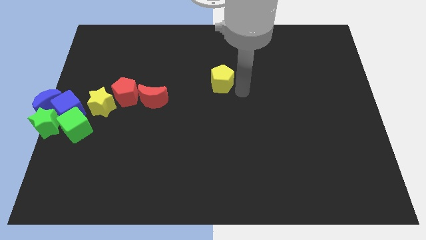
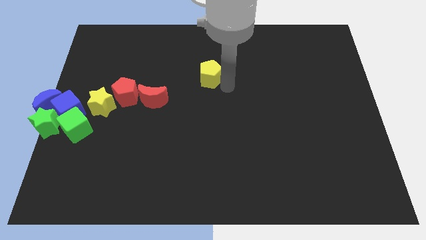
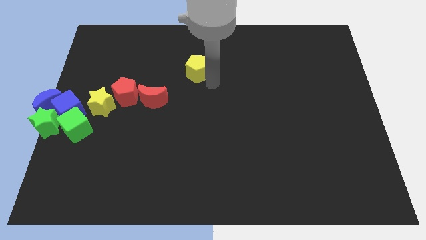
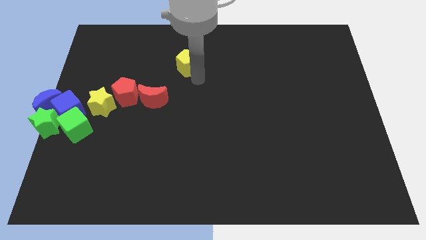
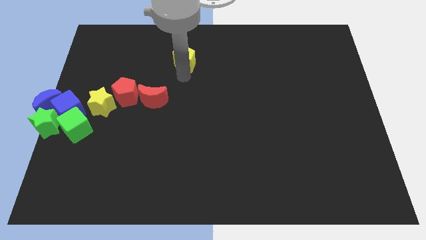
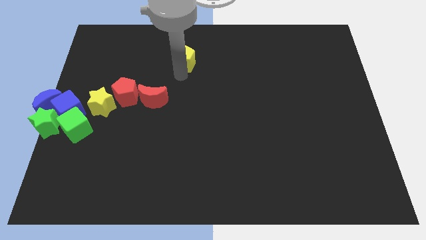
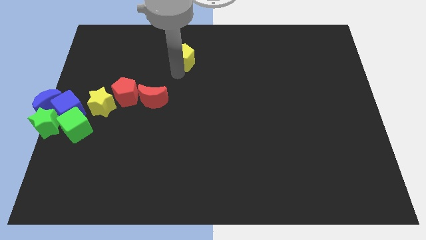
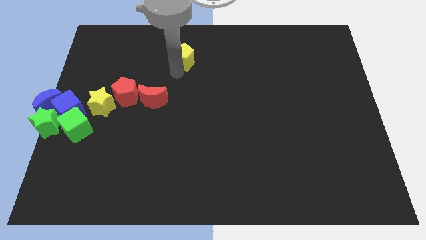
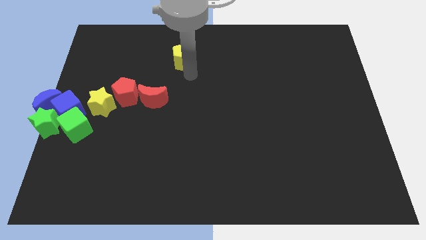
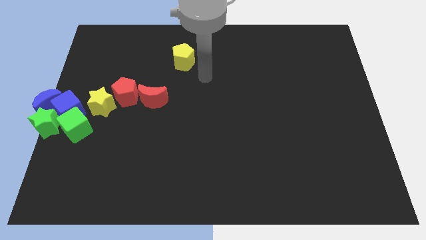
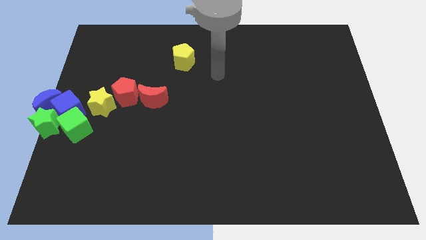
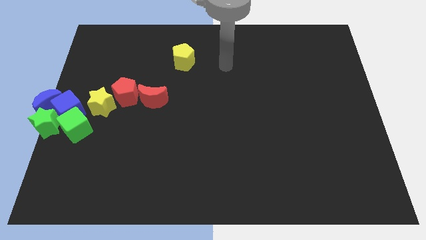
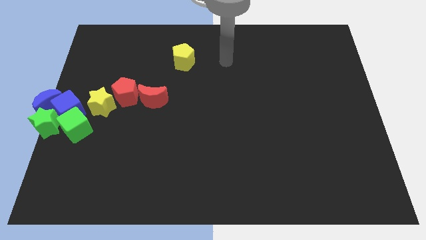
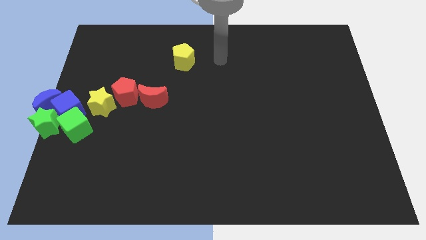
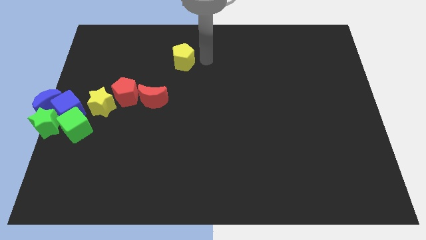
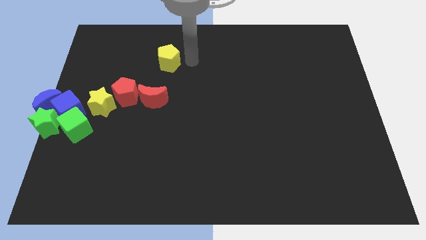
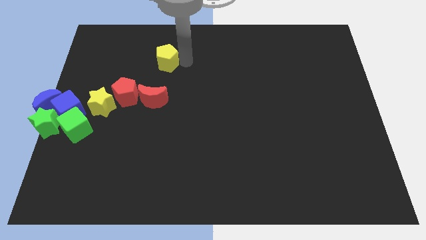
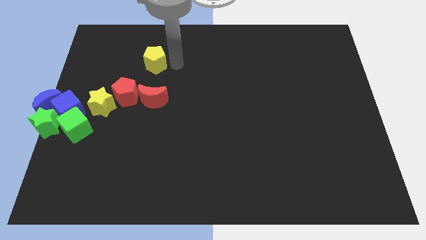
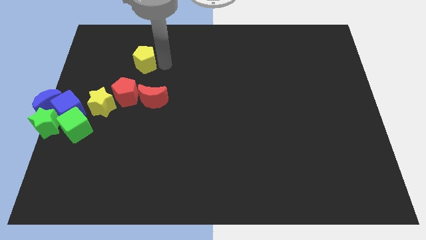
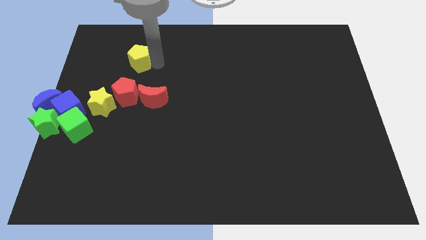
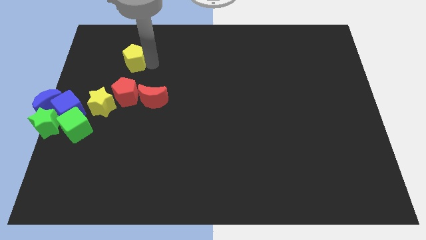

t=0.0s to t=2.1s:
place yellow pentagon above red pentagon

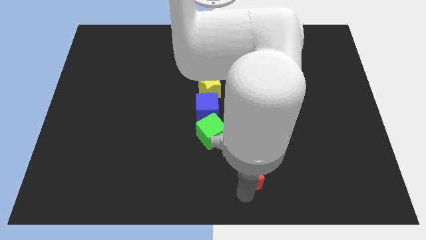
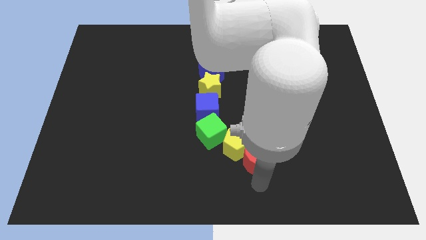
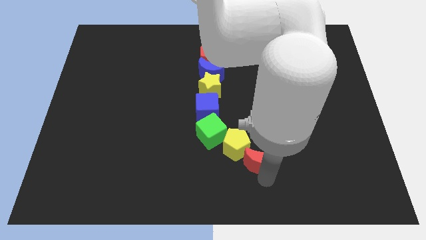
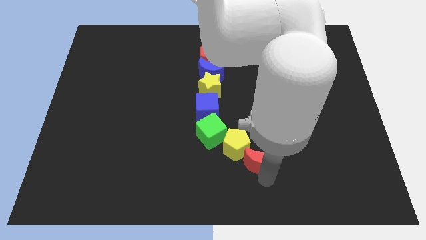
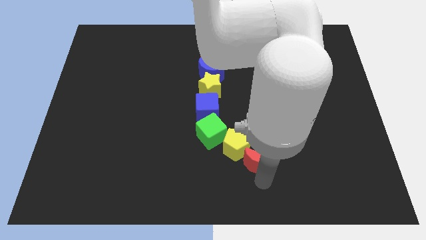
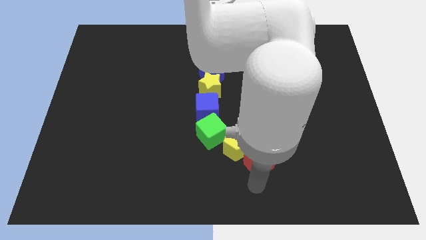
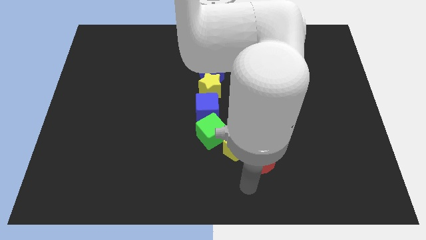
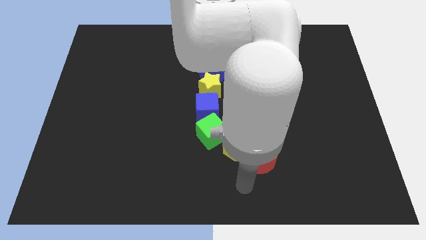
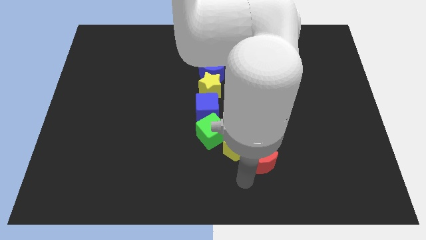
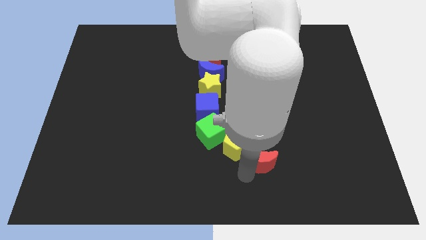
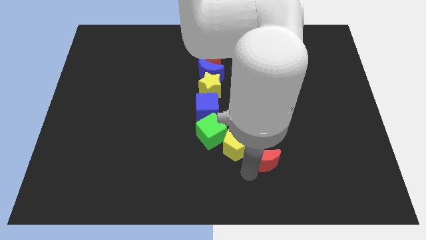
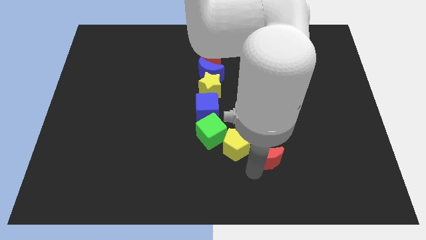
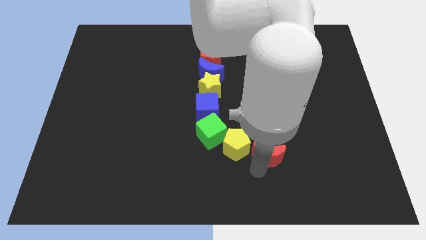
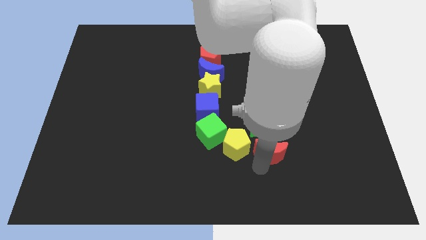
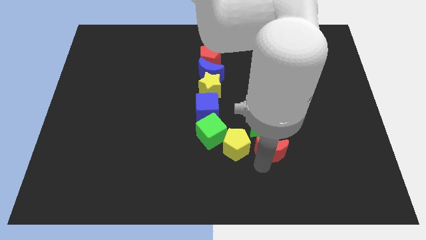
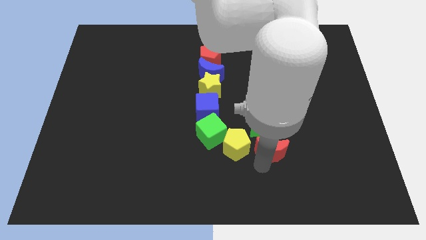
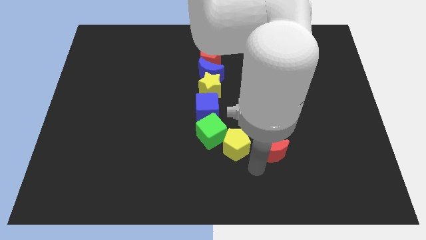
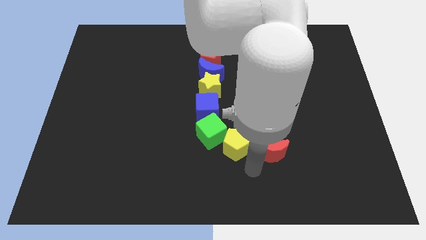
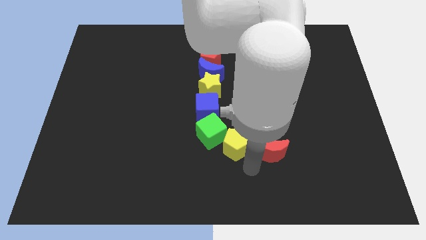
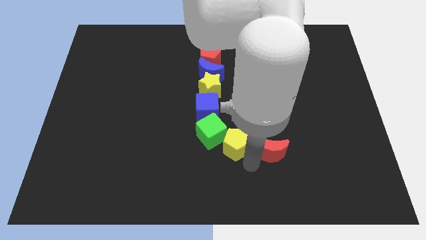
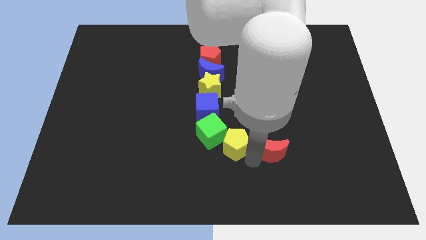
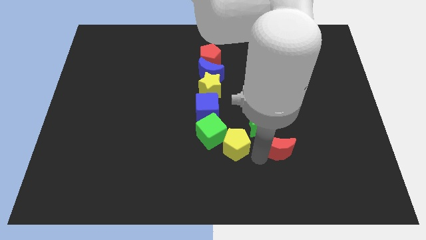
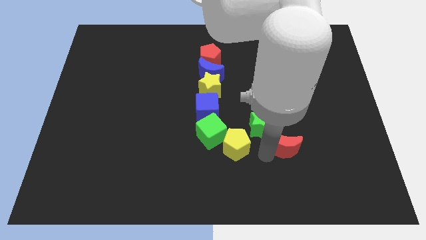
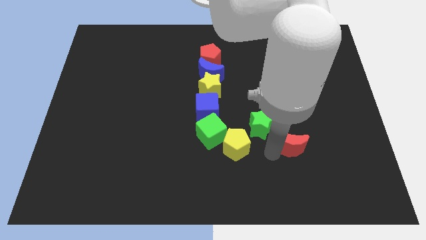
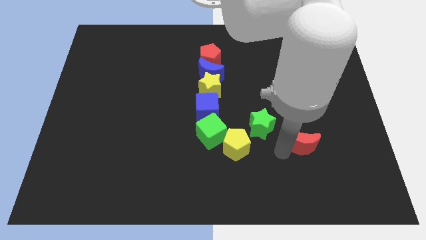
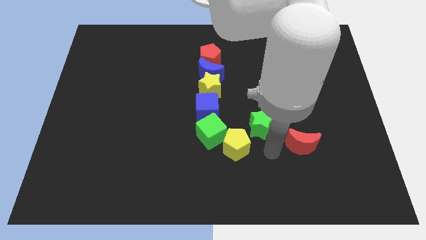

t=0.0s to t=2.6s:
put the red crescent parallel to the yellow pentagon

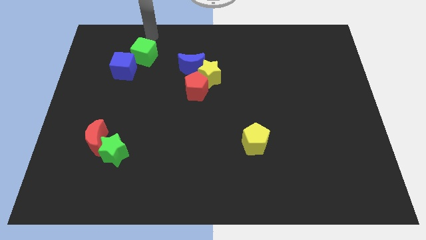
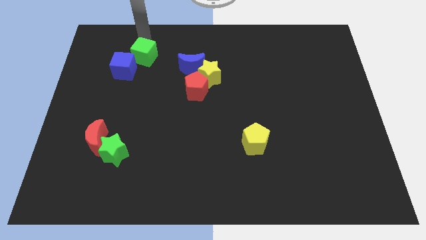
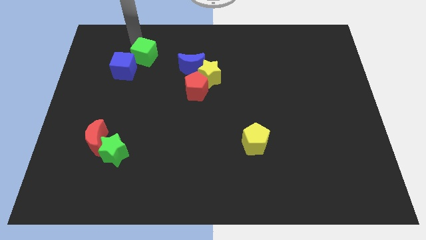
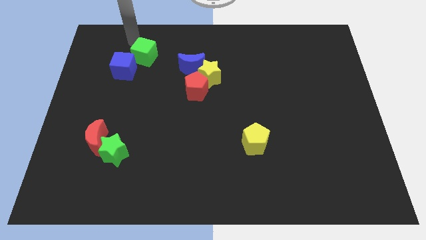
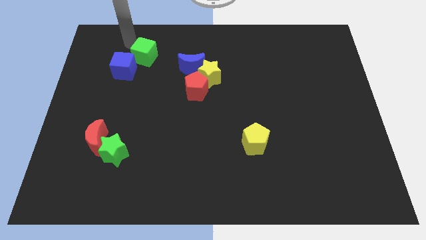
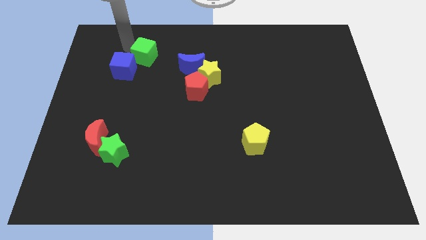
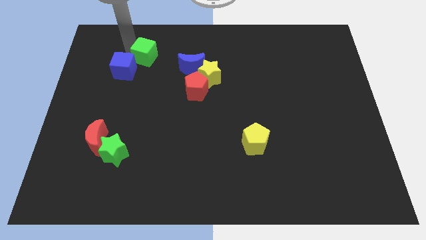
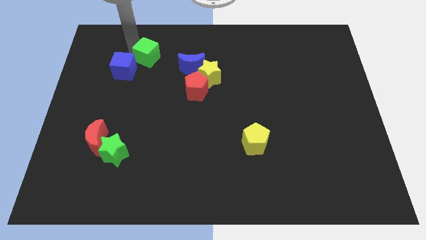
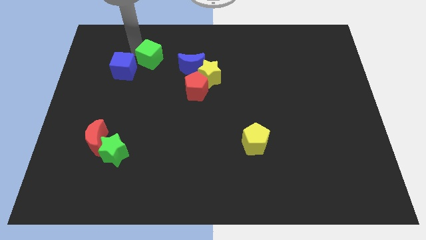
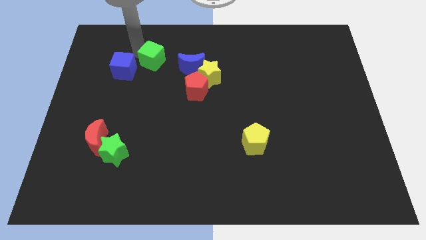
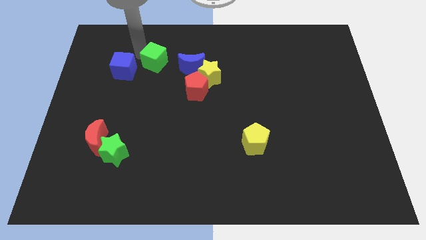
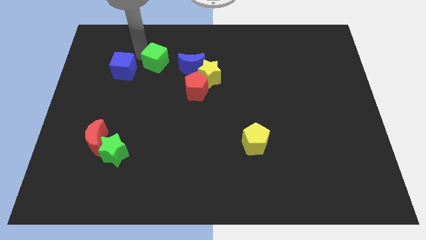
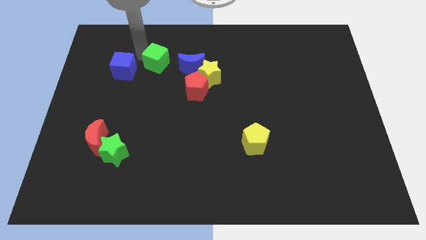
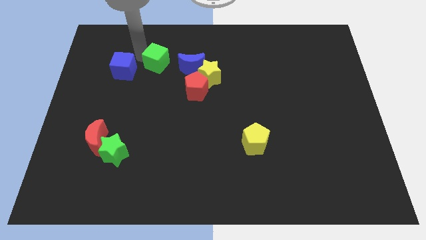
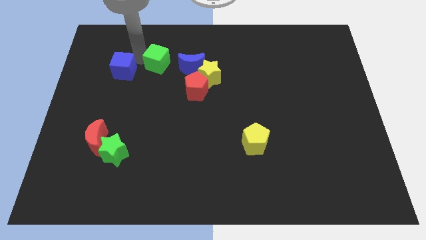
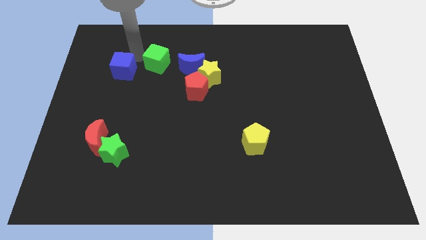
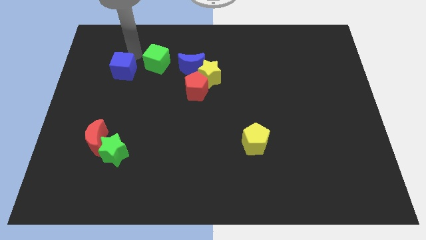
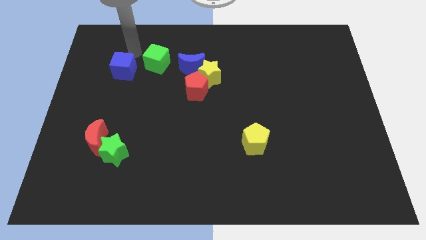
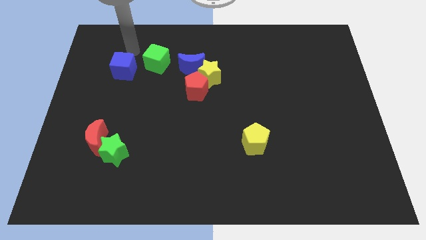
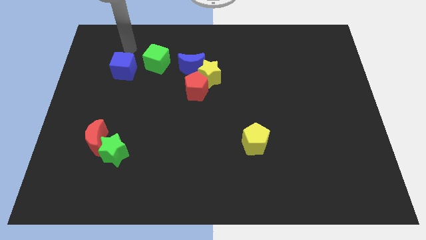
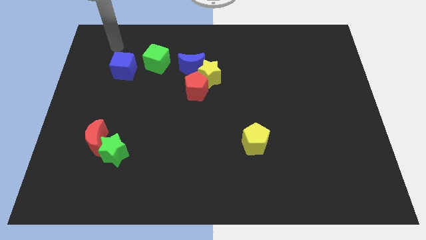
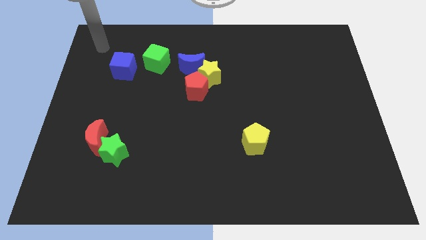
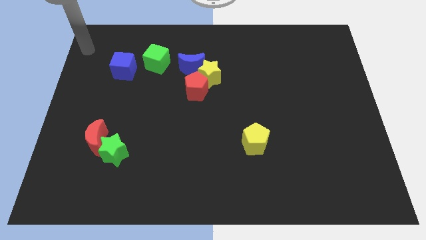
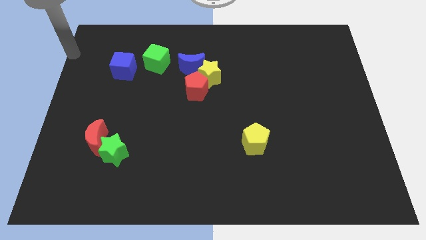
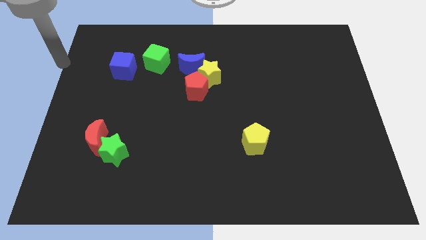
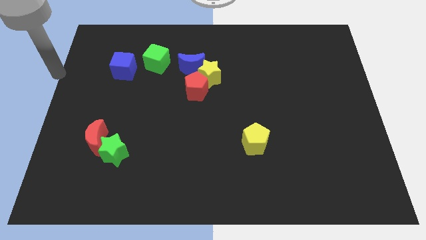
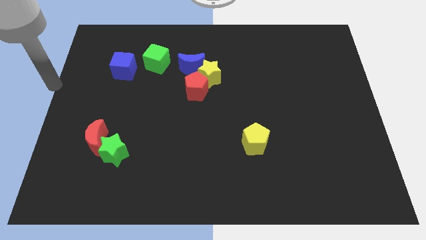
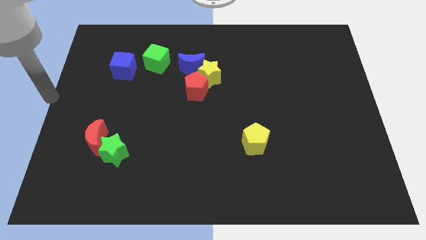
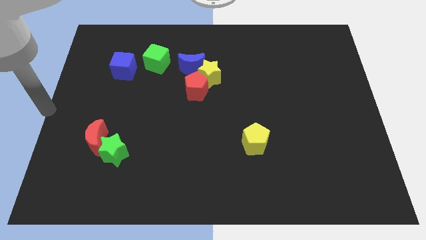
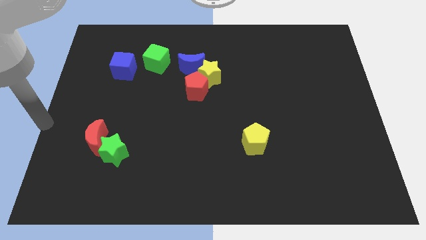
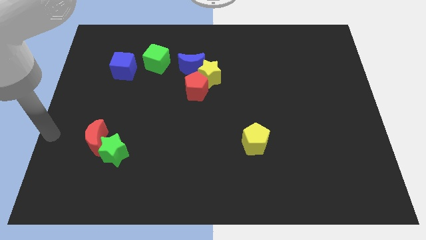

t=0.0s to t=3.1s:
push the green cube in between the blue blocks

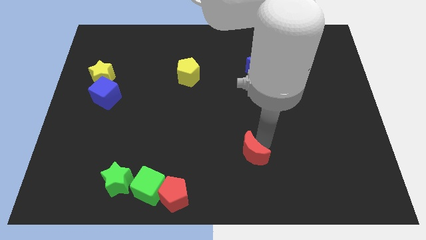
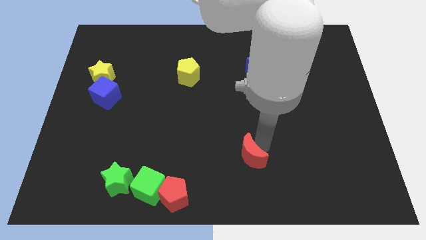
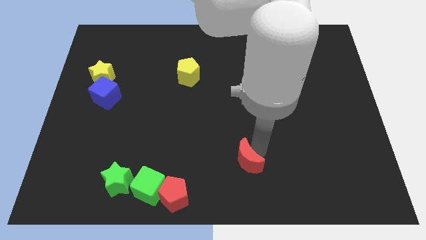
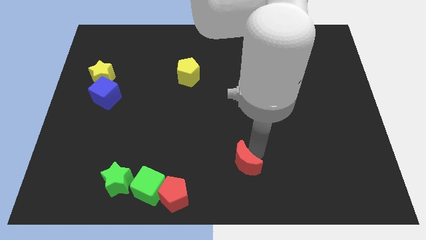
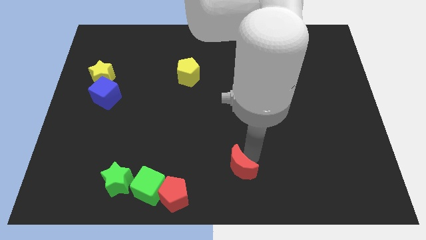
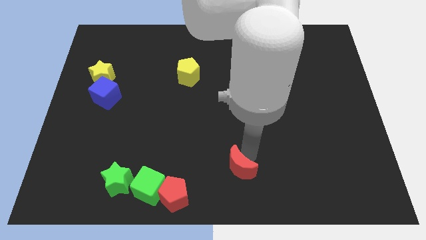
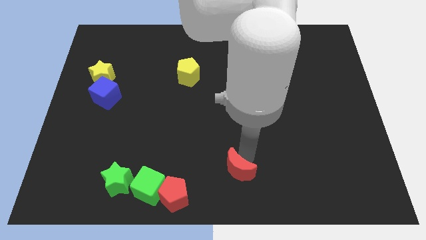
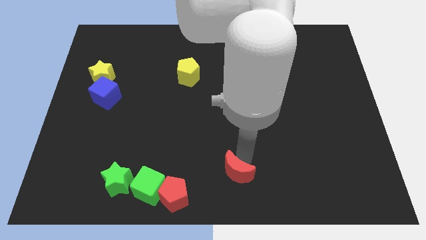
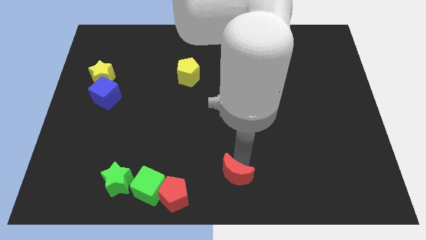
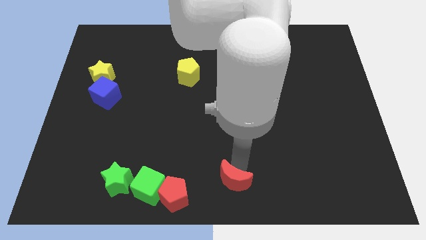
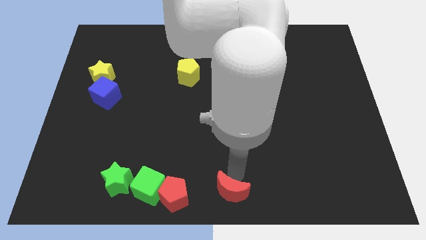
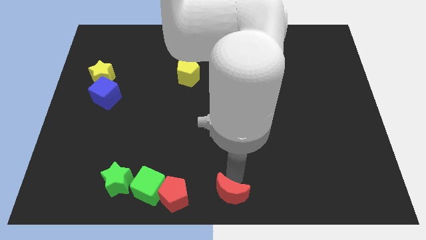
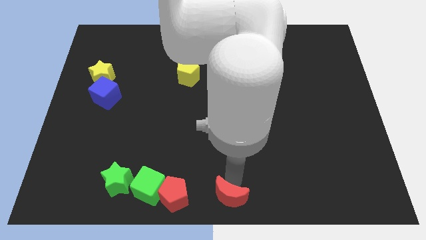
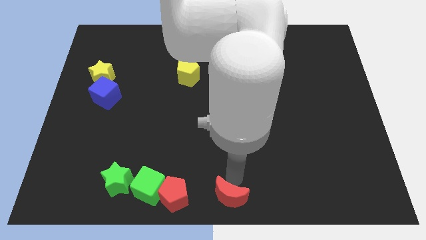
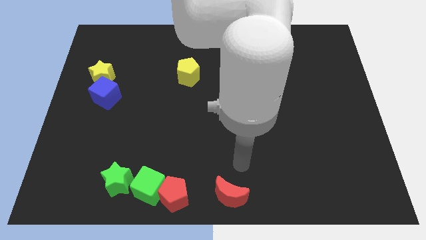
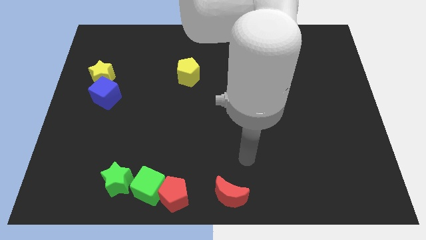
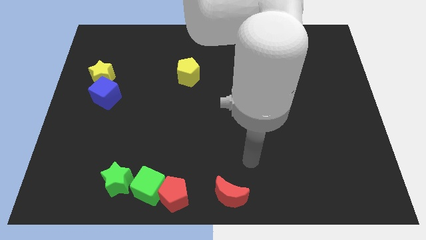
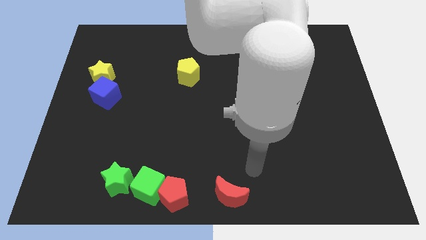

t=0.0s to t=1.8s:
drag the red moon to the bottom side of the board
